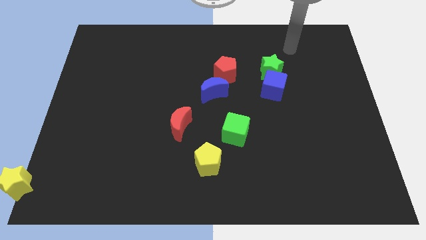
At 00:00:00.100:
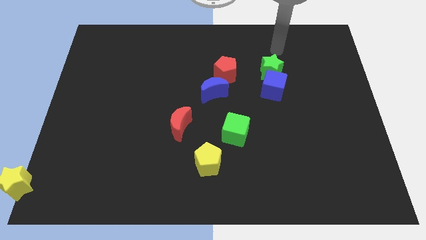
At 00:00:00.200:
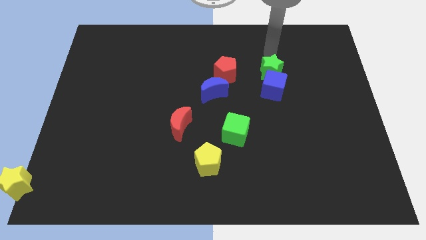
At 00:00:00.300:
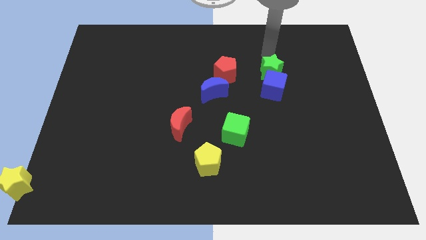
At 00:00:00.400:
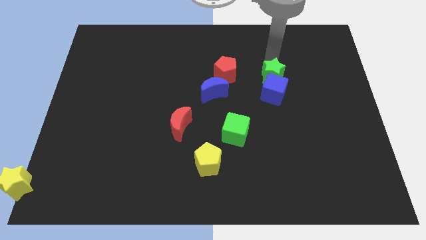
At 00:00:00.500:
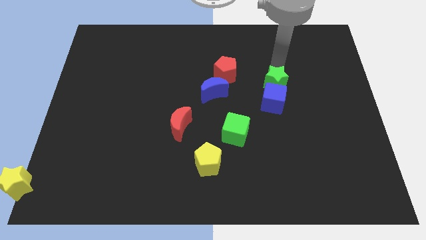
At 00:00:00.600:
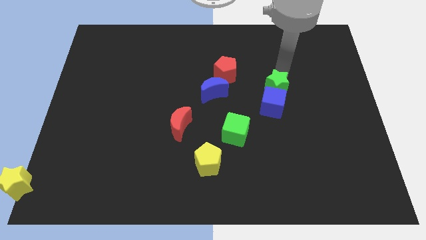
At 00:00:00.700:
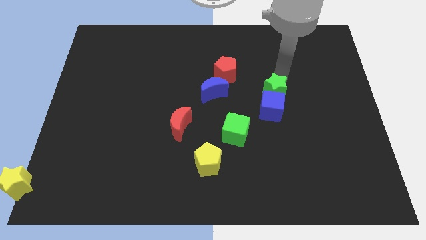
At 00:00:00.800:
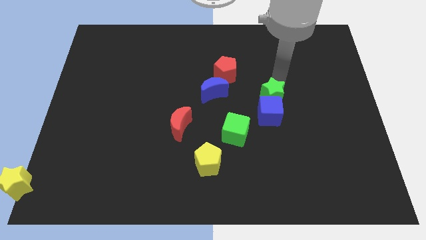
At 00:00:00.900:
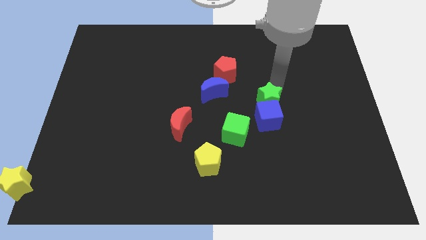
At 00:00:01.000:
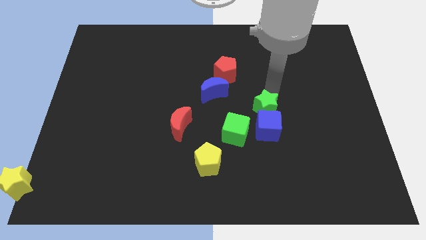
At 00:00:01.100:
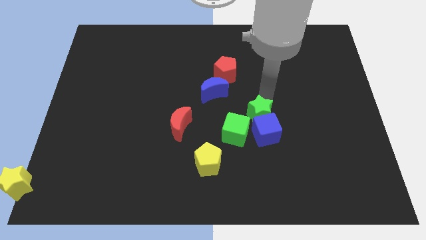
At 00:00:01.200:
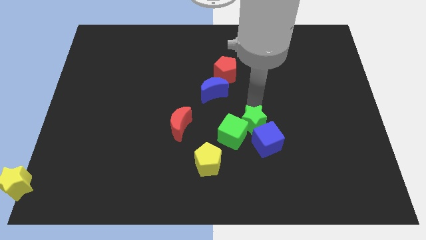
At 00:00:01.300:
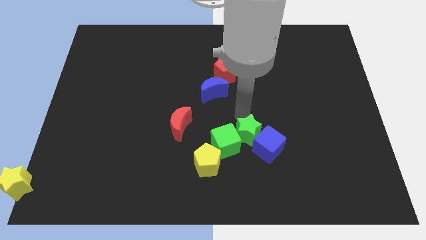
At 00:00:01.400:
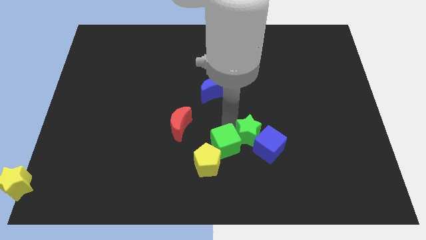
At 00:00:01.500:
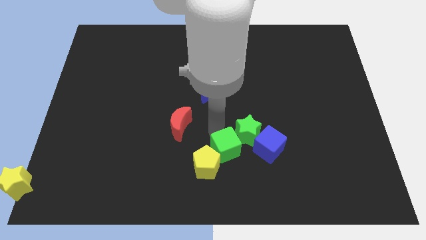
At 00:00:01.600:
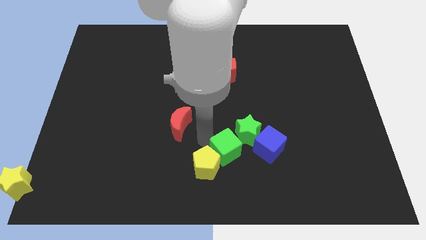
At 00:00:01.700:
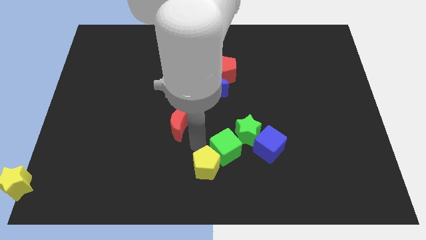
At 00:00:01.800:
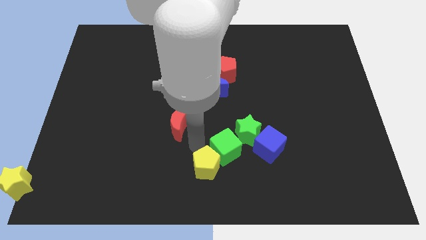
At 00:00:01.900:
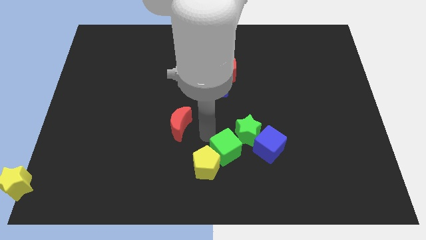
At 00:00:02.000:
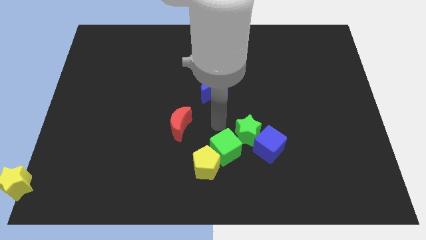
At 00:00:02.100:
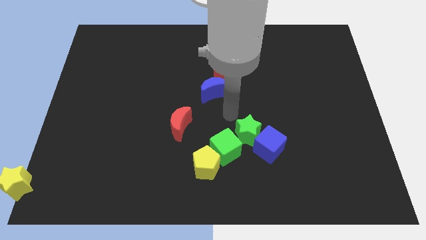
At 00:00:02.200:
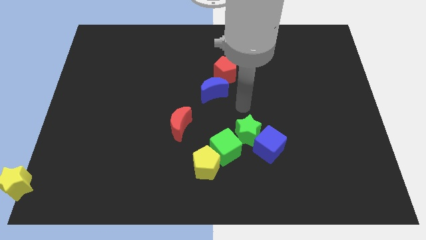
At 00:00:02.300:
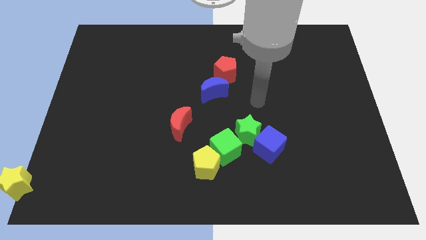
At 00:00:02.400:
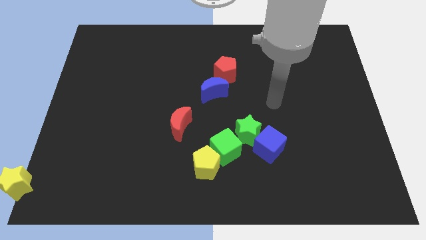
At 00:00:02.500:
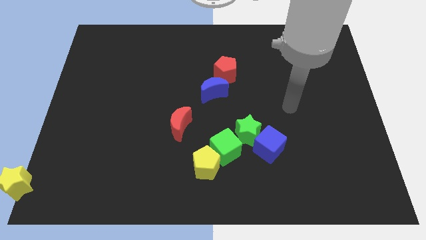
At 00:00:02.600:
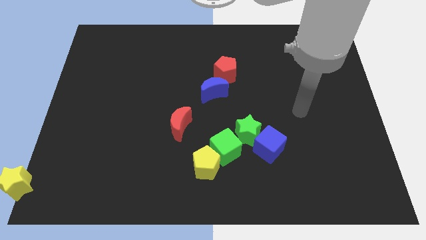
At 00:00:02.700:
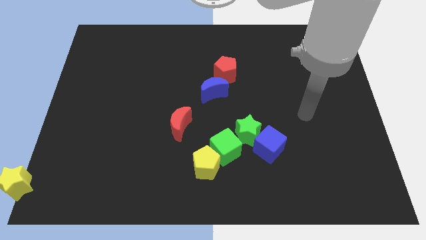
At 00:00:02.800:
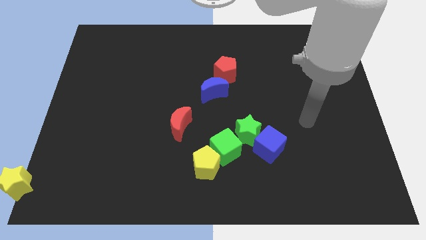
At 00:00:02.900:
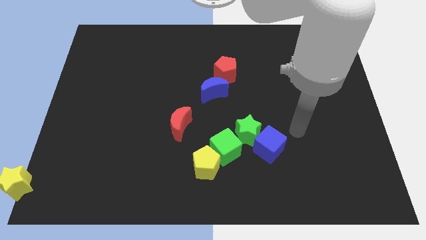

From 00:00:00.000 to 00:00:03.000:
move the green star into the green cube

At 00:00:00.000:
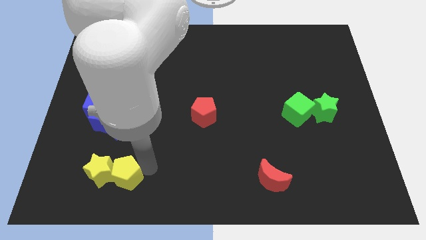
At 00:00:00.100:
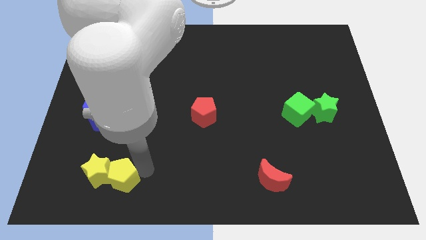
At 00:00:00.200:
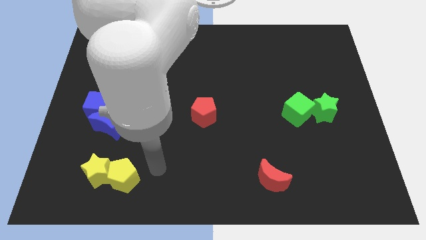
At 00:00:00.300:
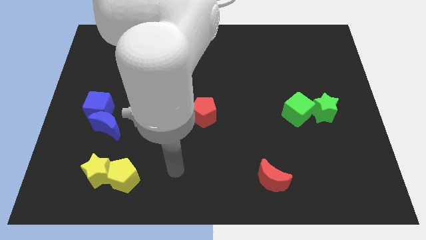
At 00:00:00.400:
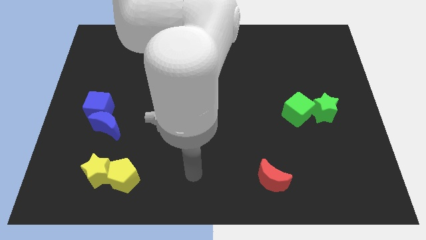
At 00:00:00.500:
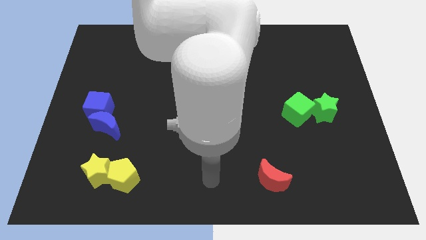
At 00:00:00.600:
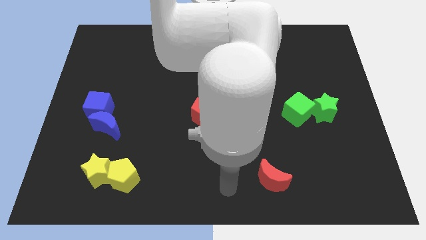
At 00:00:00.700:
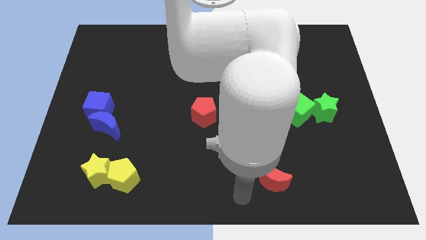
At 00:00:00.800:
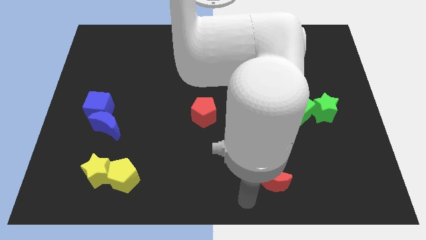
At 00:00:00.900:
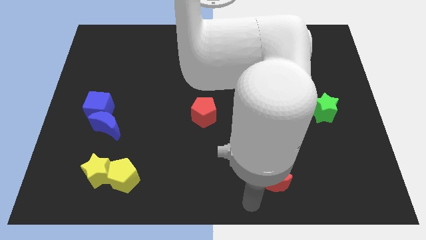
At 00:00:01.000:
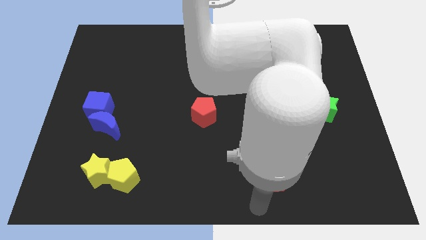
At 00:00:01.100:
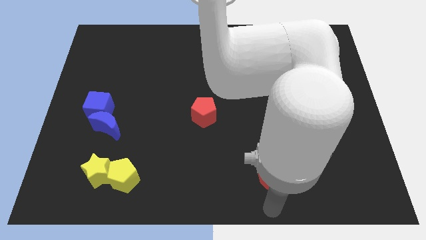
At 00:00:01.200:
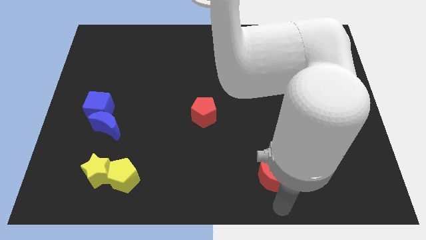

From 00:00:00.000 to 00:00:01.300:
place your arm to the bottom of red moon

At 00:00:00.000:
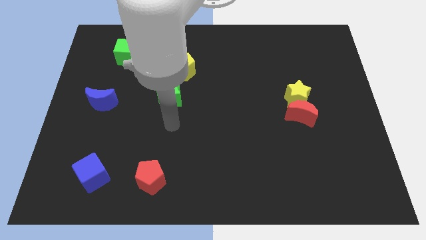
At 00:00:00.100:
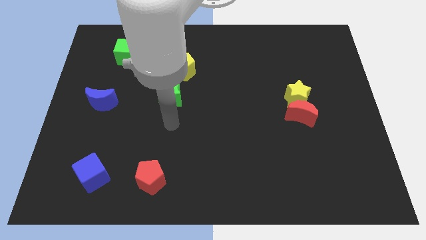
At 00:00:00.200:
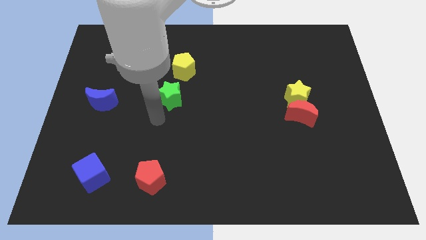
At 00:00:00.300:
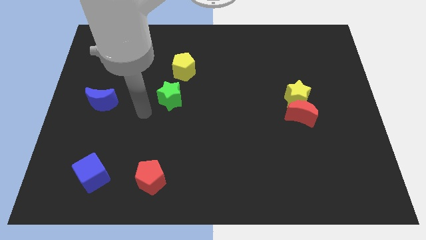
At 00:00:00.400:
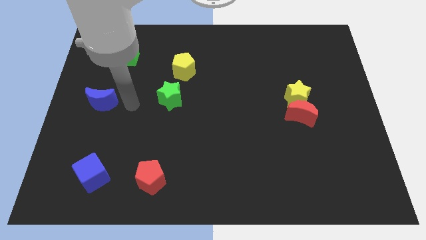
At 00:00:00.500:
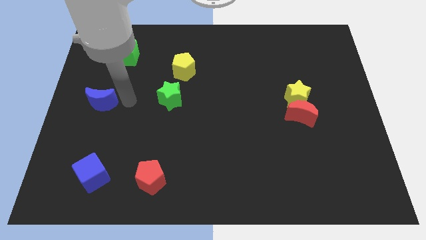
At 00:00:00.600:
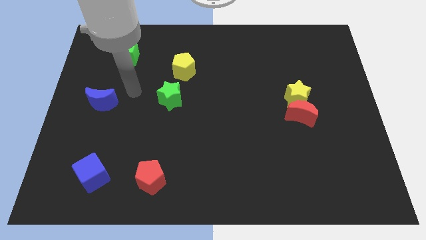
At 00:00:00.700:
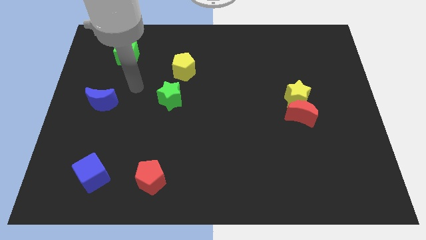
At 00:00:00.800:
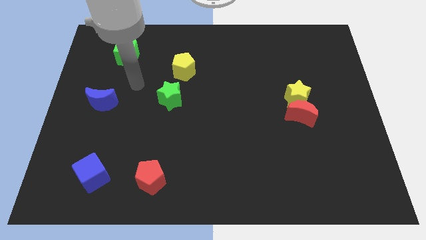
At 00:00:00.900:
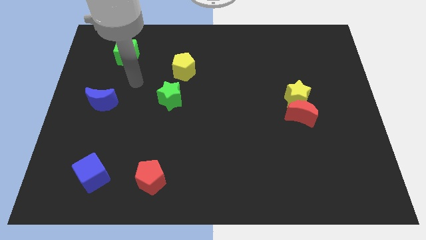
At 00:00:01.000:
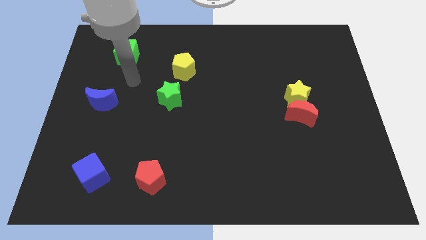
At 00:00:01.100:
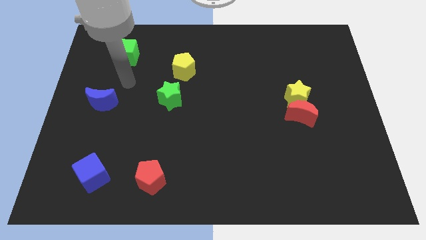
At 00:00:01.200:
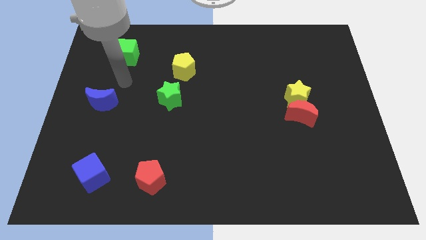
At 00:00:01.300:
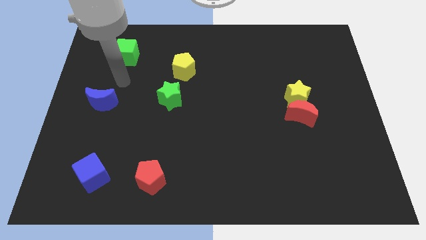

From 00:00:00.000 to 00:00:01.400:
place your hand below the green cube

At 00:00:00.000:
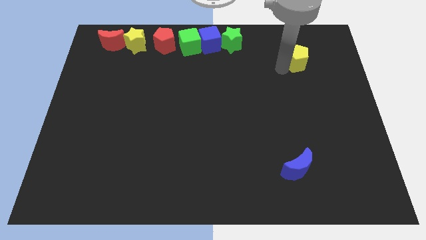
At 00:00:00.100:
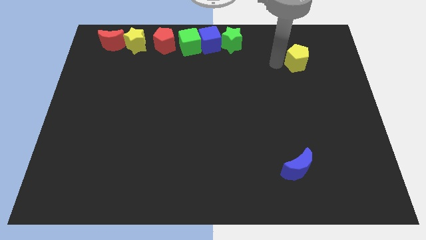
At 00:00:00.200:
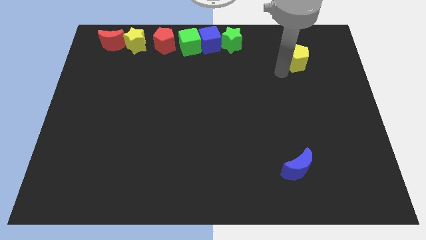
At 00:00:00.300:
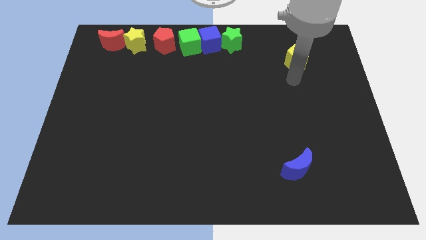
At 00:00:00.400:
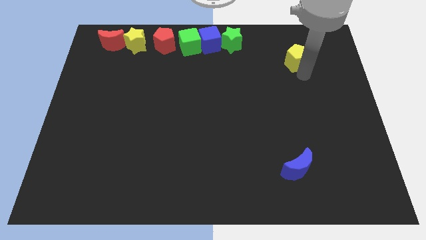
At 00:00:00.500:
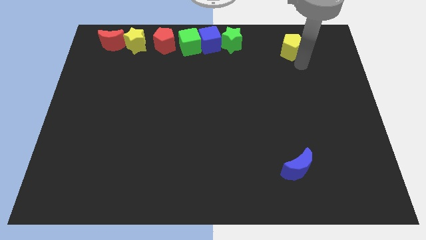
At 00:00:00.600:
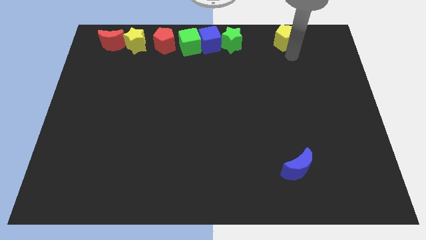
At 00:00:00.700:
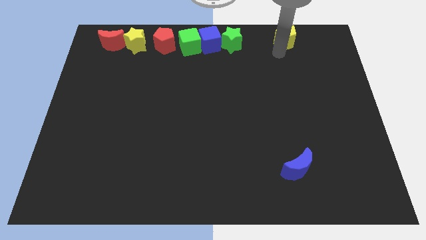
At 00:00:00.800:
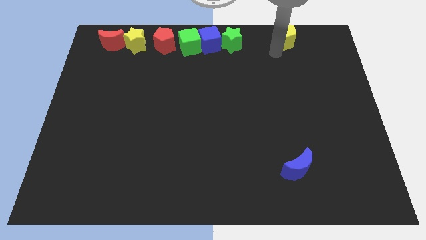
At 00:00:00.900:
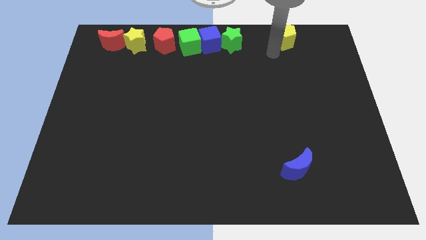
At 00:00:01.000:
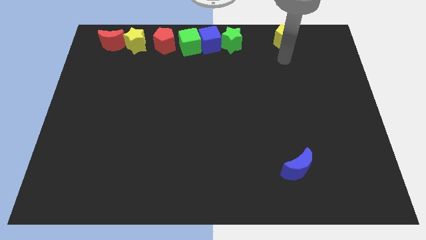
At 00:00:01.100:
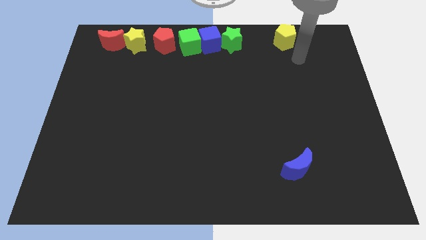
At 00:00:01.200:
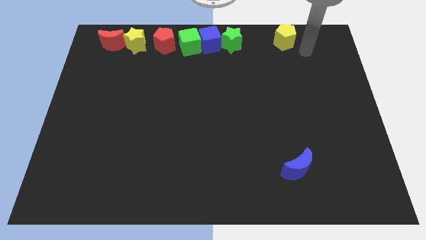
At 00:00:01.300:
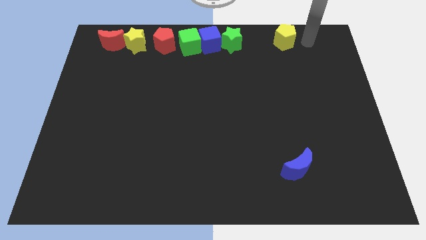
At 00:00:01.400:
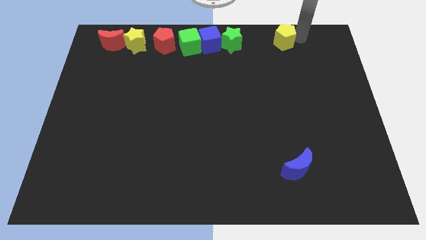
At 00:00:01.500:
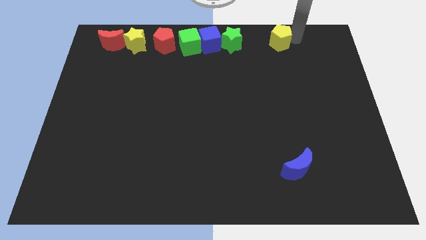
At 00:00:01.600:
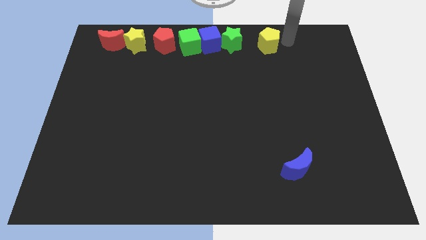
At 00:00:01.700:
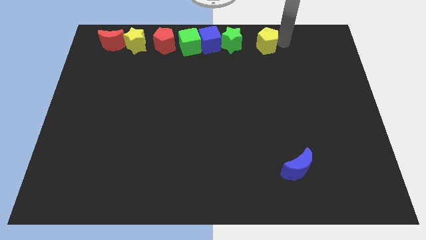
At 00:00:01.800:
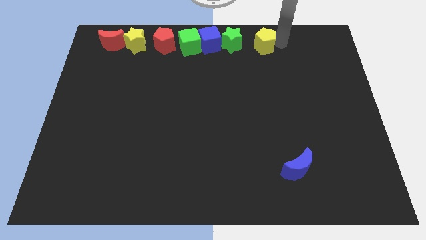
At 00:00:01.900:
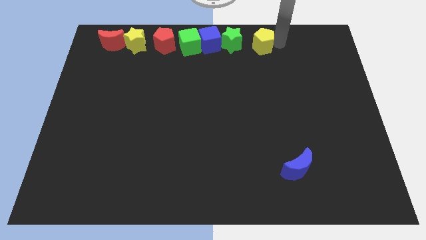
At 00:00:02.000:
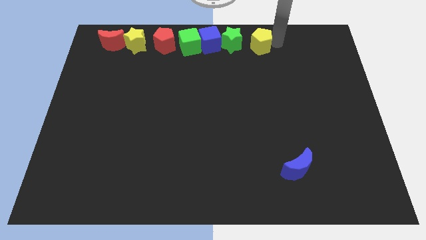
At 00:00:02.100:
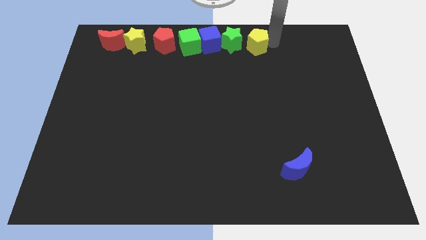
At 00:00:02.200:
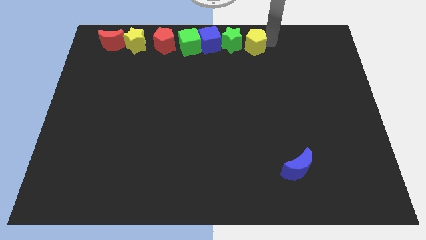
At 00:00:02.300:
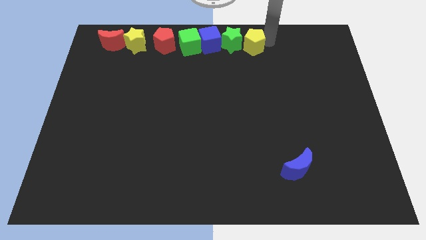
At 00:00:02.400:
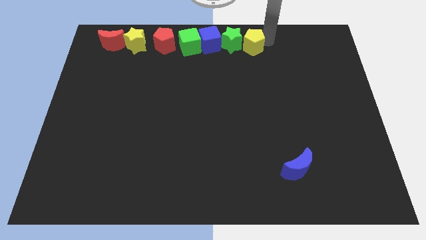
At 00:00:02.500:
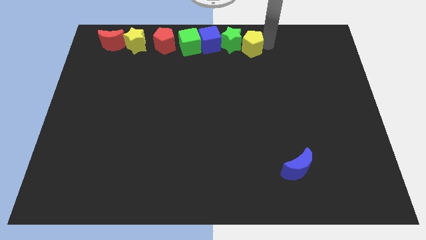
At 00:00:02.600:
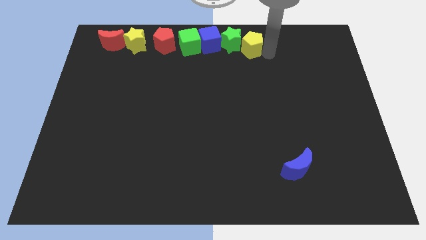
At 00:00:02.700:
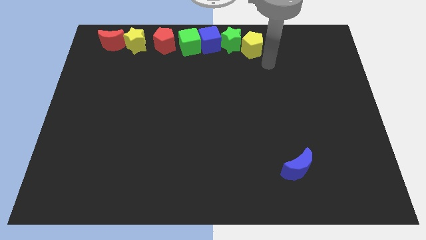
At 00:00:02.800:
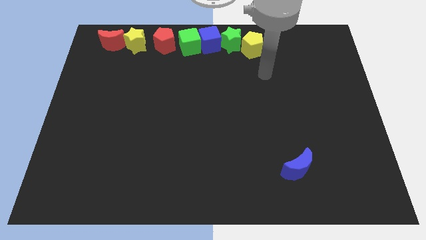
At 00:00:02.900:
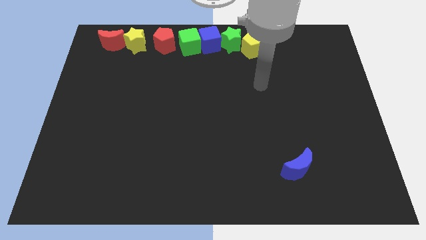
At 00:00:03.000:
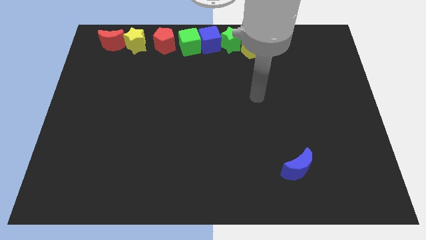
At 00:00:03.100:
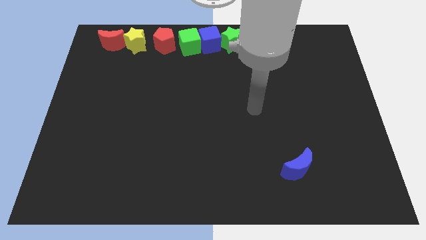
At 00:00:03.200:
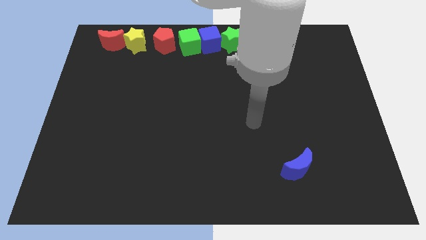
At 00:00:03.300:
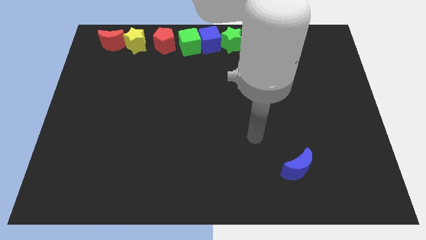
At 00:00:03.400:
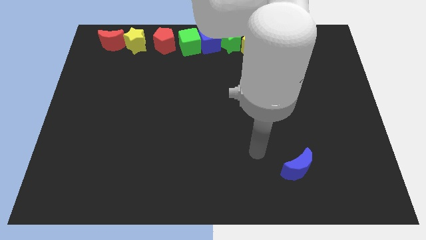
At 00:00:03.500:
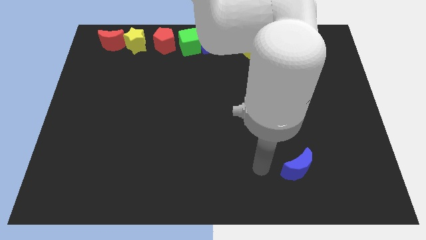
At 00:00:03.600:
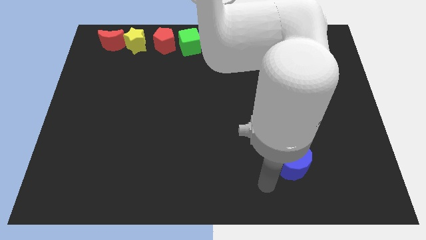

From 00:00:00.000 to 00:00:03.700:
move yellow pentagon to the right of green star
